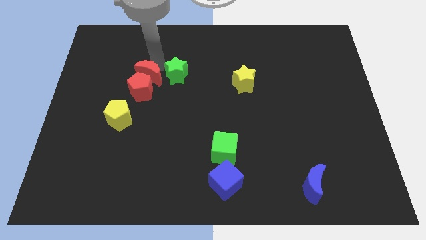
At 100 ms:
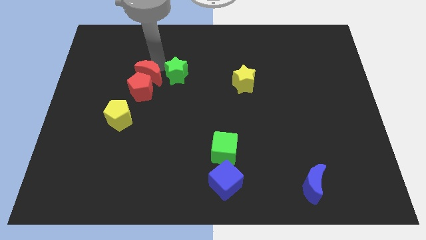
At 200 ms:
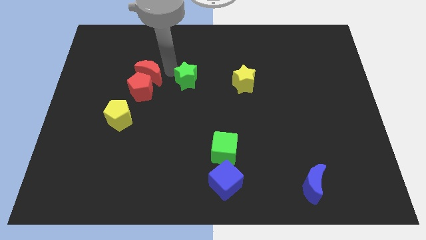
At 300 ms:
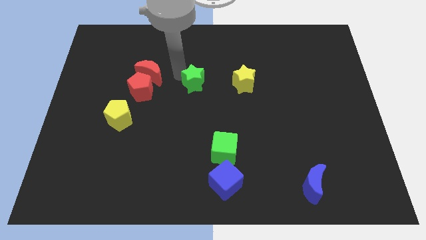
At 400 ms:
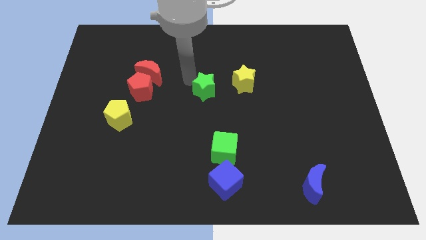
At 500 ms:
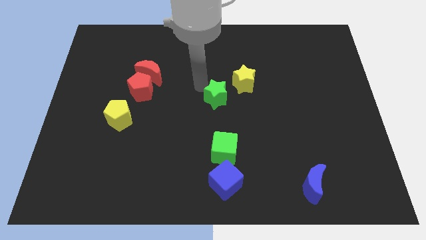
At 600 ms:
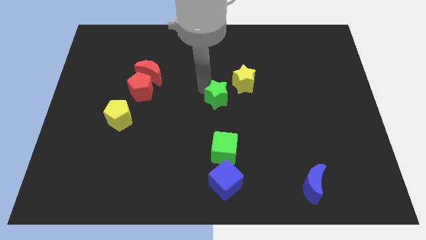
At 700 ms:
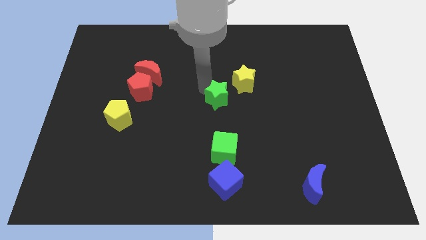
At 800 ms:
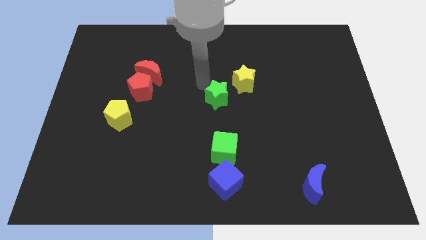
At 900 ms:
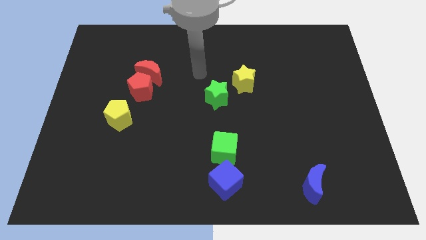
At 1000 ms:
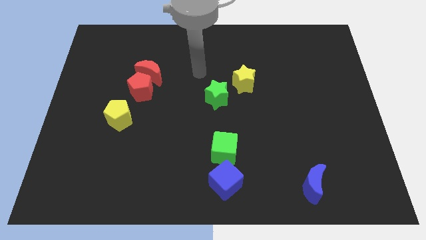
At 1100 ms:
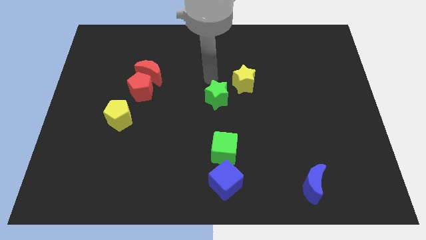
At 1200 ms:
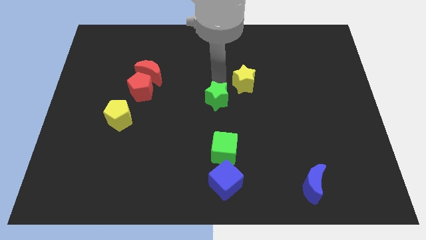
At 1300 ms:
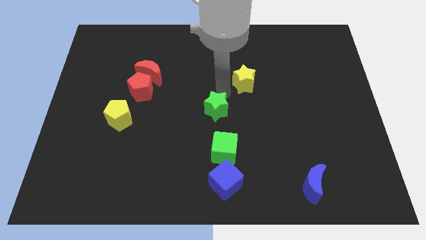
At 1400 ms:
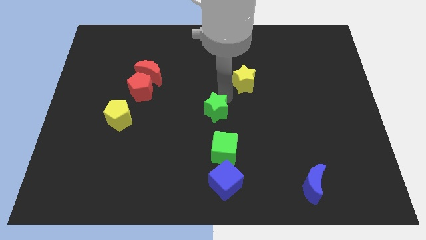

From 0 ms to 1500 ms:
move the green star top of the green cube

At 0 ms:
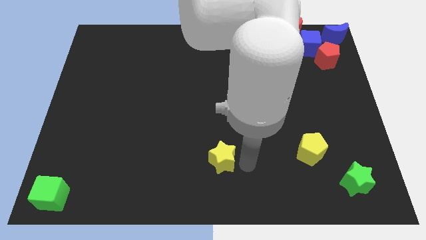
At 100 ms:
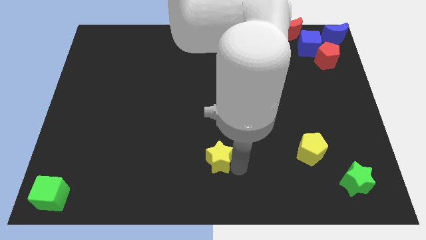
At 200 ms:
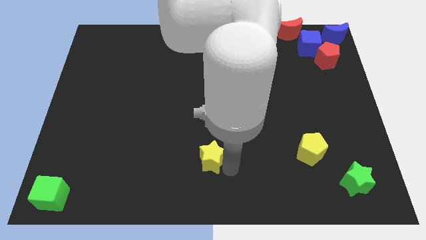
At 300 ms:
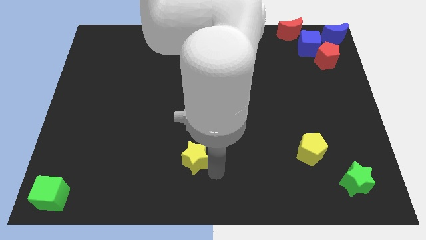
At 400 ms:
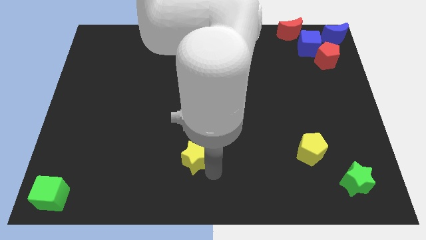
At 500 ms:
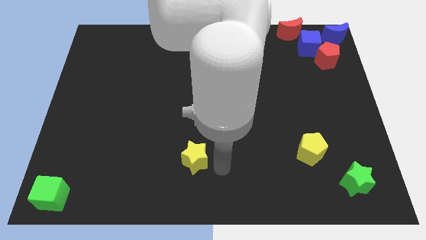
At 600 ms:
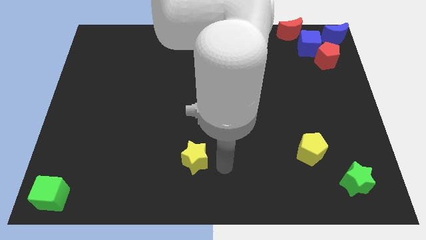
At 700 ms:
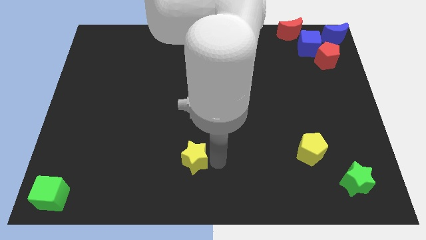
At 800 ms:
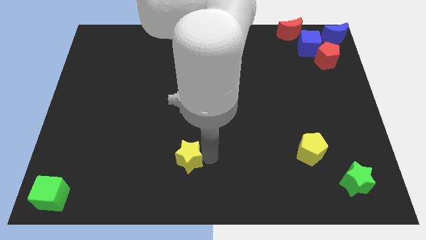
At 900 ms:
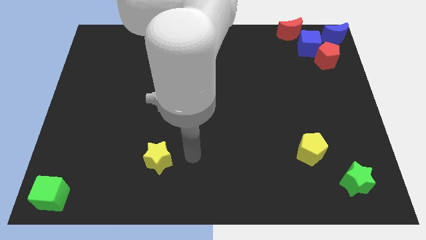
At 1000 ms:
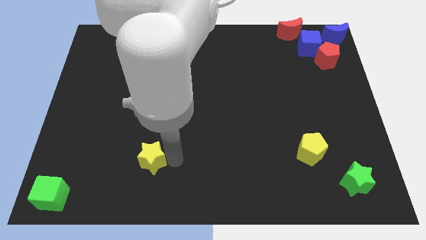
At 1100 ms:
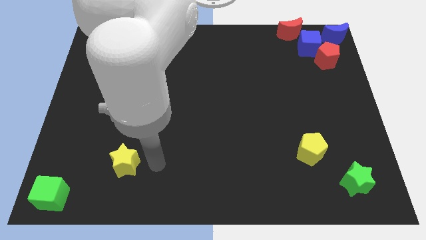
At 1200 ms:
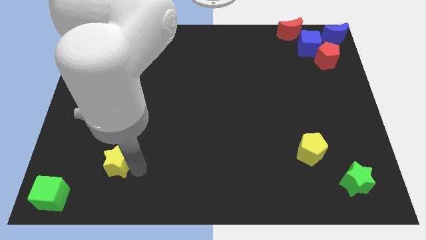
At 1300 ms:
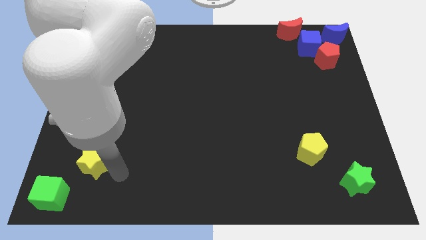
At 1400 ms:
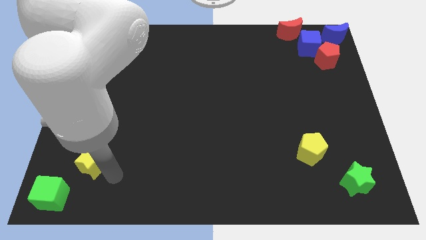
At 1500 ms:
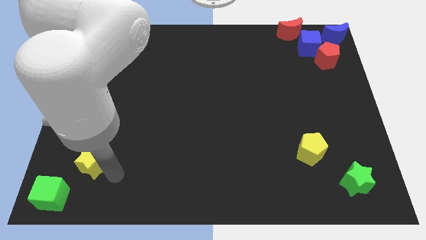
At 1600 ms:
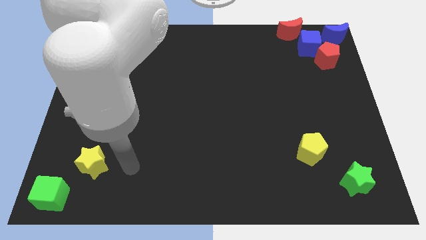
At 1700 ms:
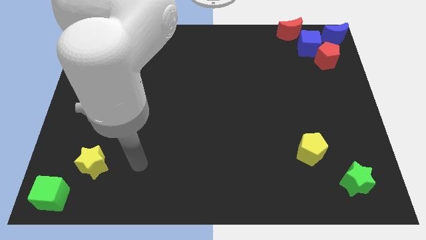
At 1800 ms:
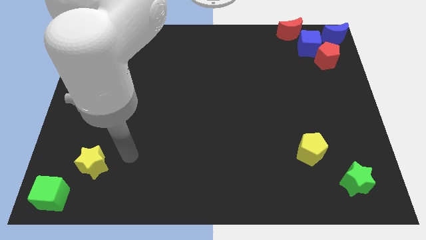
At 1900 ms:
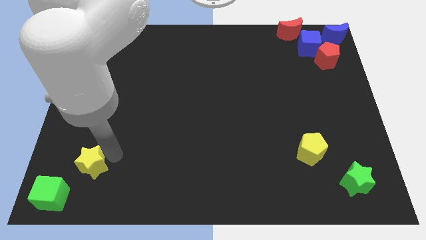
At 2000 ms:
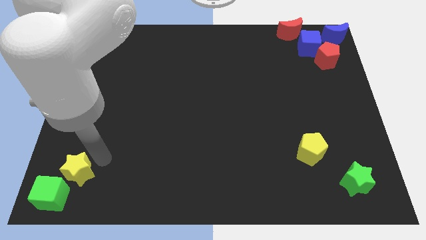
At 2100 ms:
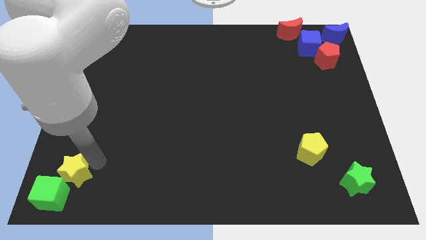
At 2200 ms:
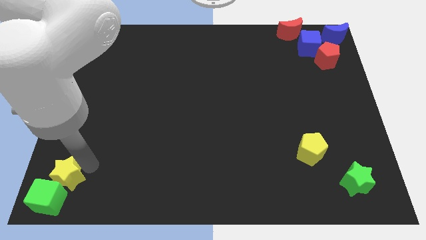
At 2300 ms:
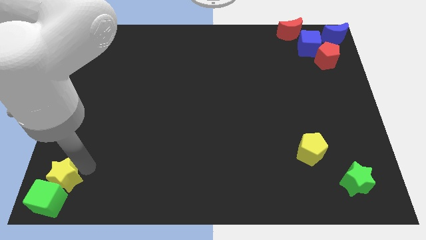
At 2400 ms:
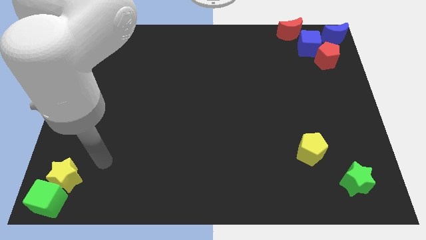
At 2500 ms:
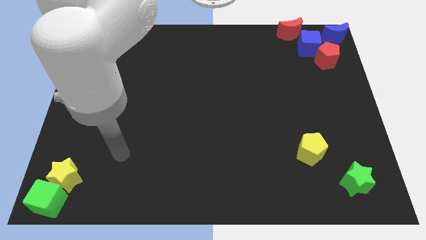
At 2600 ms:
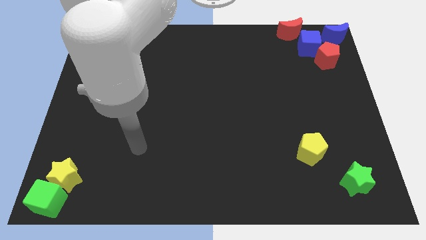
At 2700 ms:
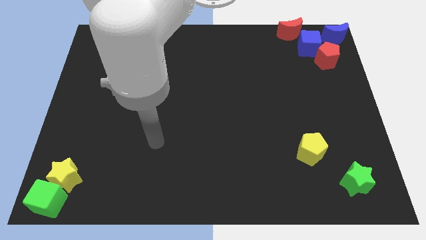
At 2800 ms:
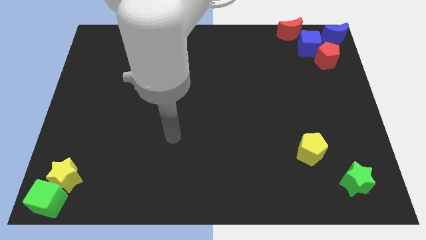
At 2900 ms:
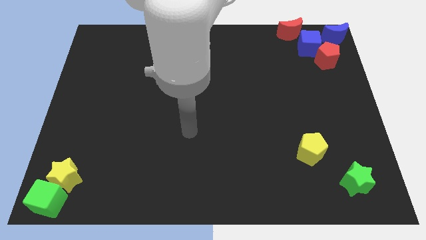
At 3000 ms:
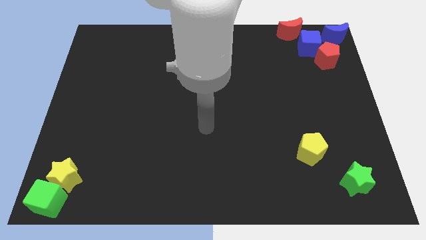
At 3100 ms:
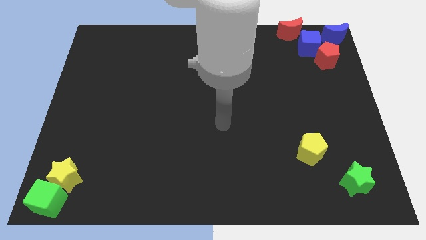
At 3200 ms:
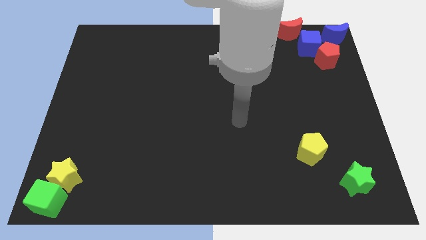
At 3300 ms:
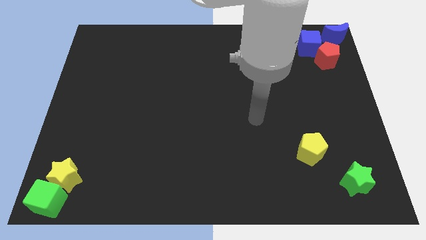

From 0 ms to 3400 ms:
push the yellow star into the green cube

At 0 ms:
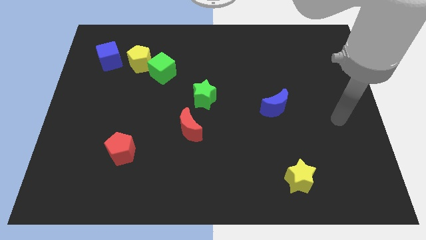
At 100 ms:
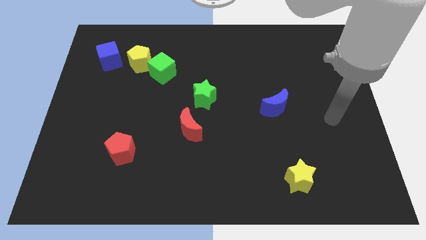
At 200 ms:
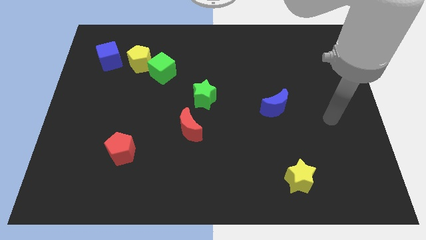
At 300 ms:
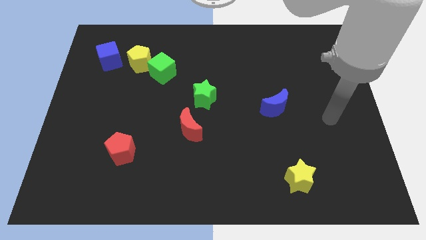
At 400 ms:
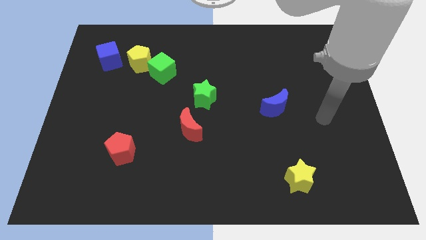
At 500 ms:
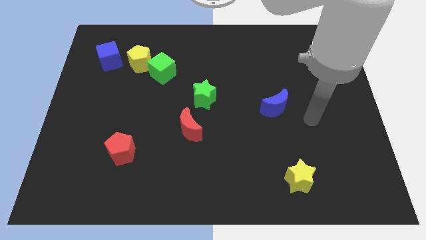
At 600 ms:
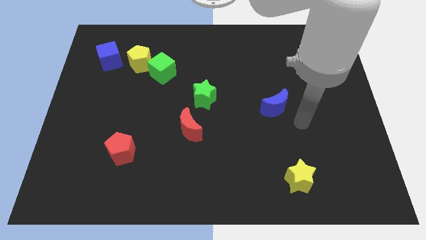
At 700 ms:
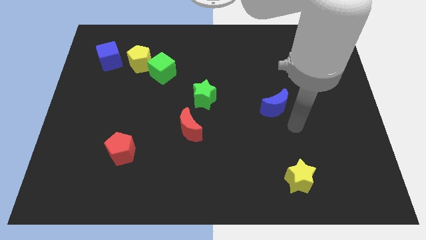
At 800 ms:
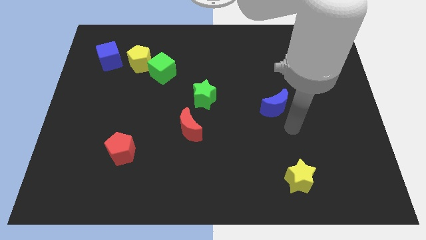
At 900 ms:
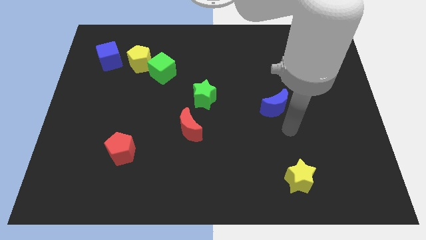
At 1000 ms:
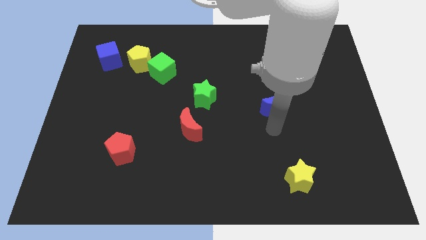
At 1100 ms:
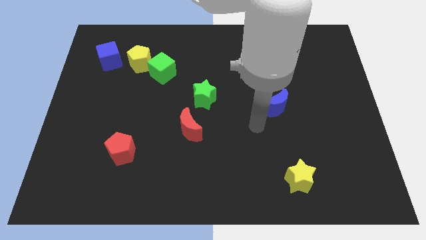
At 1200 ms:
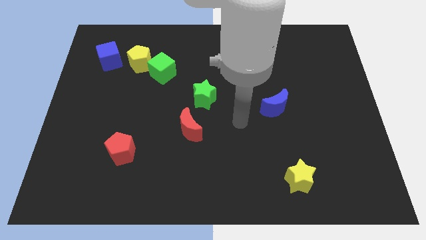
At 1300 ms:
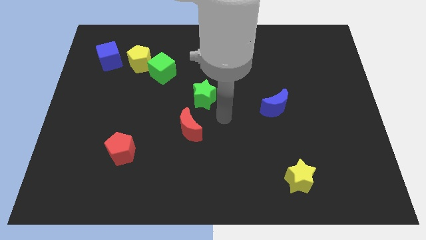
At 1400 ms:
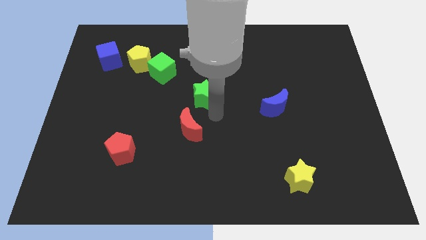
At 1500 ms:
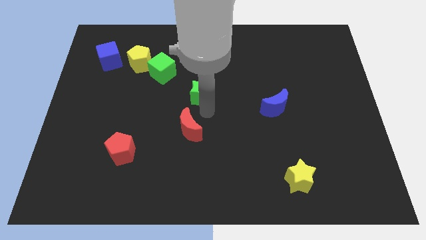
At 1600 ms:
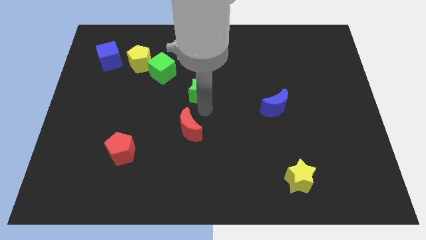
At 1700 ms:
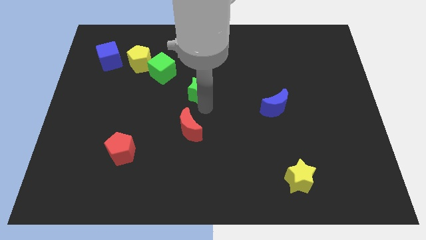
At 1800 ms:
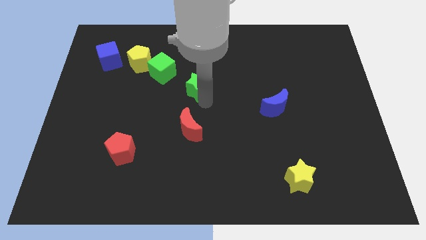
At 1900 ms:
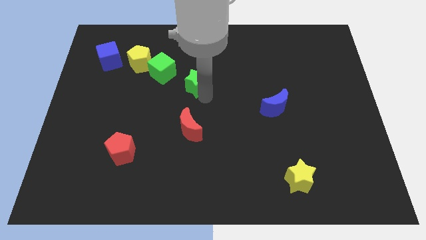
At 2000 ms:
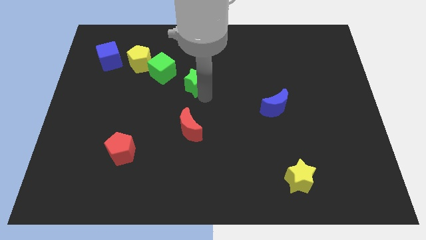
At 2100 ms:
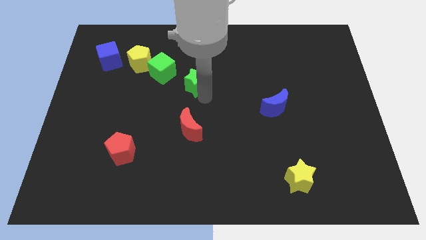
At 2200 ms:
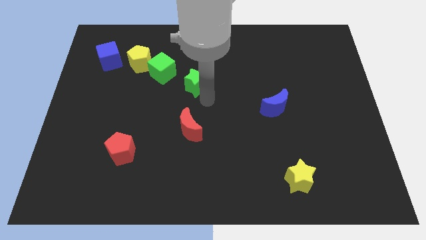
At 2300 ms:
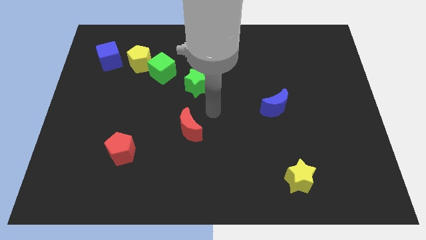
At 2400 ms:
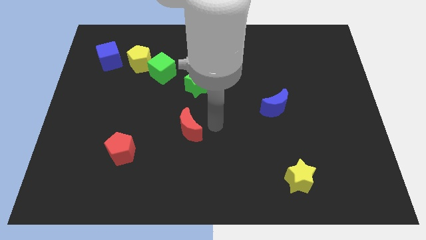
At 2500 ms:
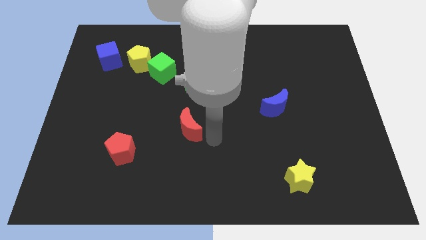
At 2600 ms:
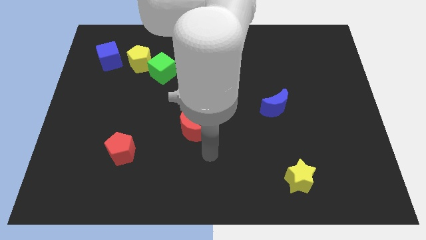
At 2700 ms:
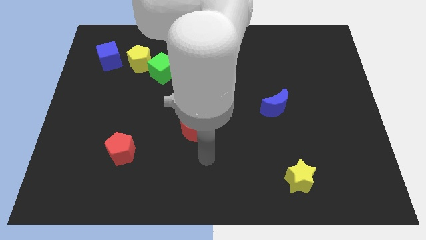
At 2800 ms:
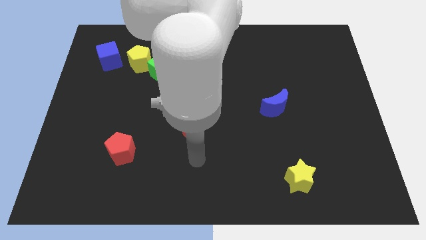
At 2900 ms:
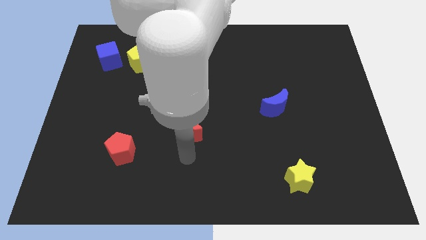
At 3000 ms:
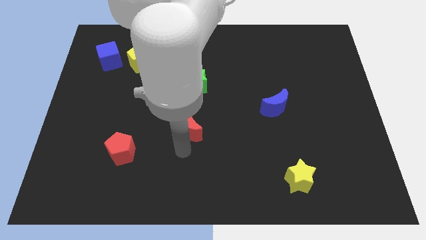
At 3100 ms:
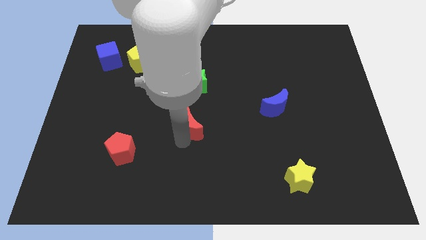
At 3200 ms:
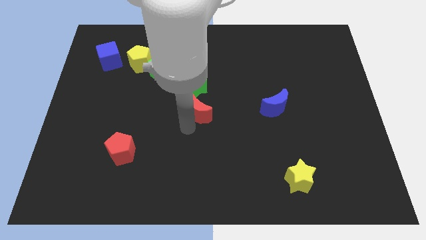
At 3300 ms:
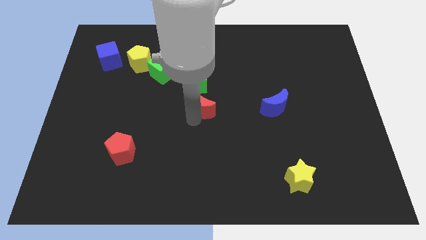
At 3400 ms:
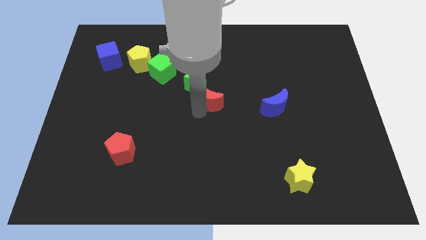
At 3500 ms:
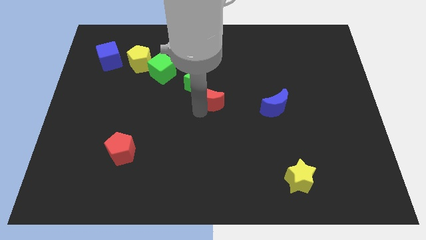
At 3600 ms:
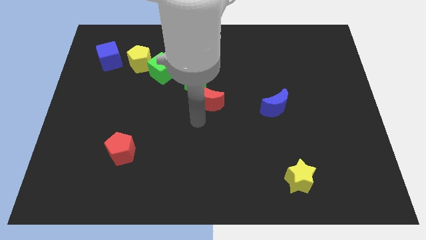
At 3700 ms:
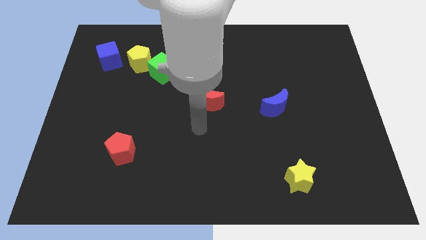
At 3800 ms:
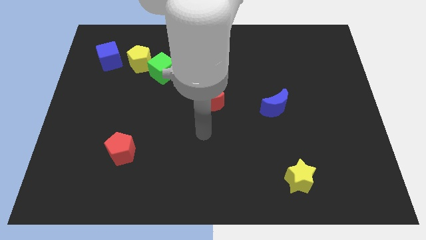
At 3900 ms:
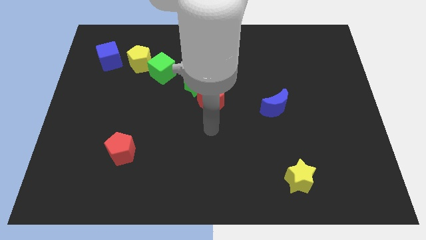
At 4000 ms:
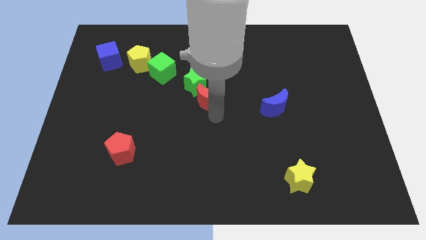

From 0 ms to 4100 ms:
slightly move the green star and red pentagon to the center of the board

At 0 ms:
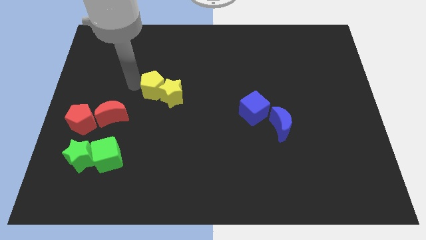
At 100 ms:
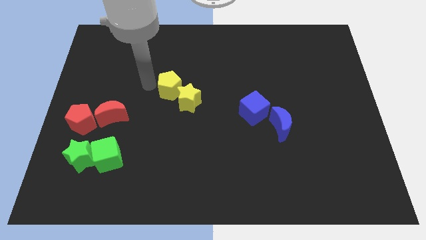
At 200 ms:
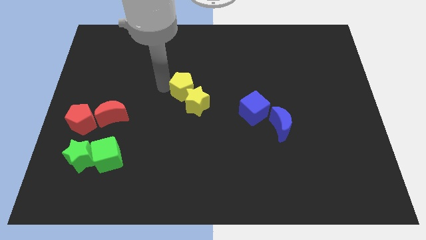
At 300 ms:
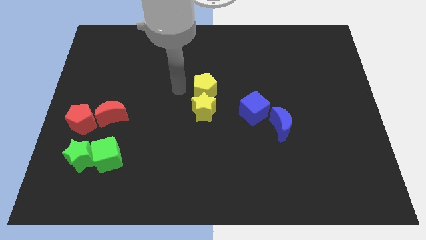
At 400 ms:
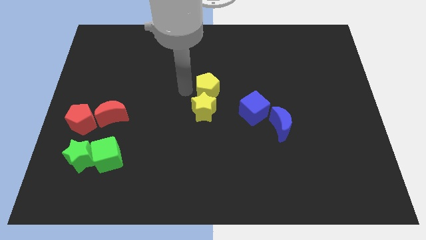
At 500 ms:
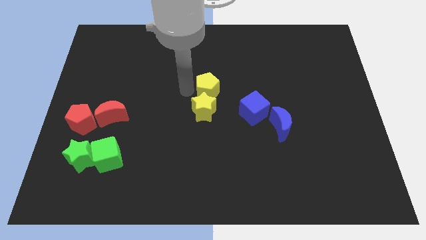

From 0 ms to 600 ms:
place the yellow pentagon above the yellow star
